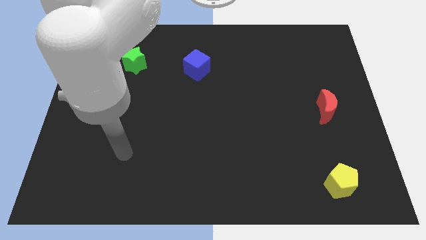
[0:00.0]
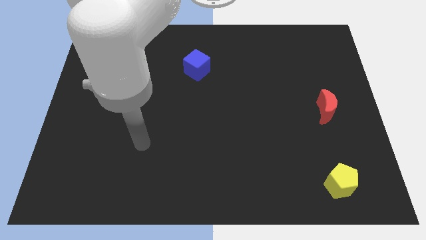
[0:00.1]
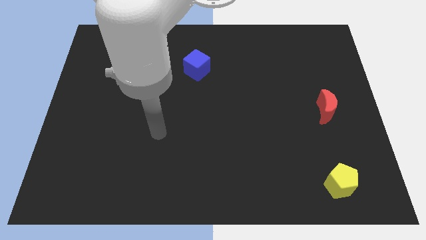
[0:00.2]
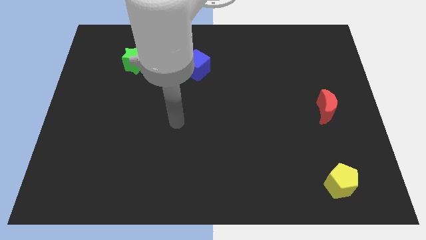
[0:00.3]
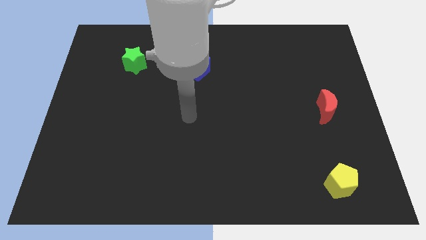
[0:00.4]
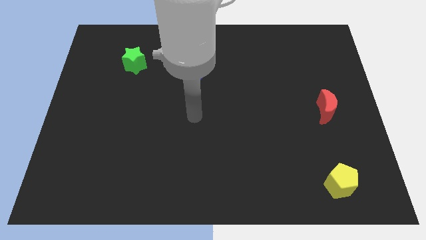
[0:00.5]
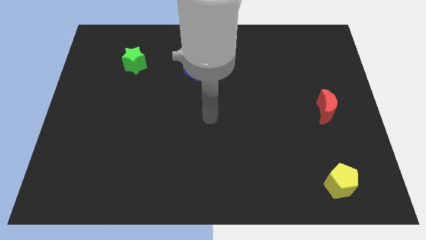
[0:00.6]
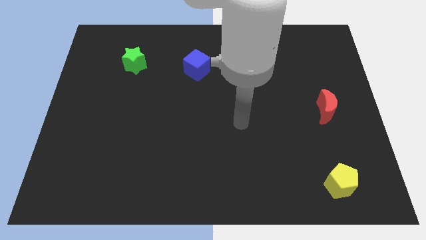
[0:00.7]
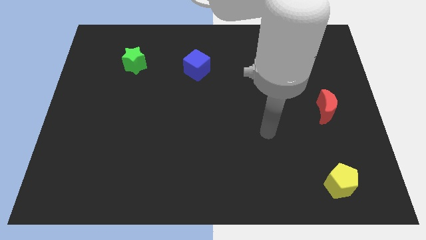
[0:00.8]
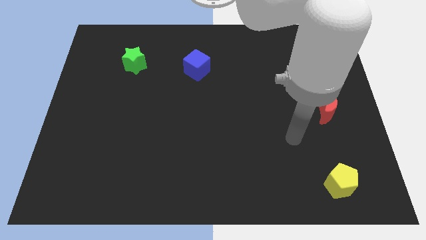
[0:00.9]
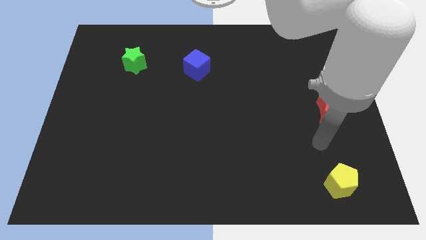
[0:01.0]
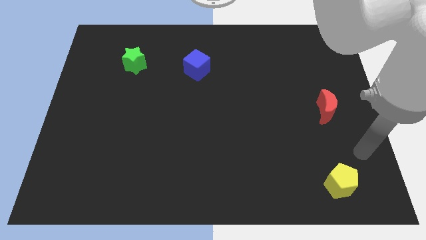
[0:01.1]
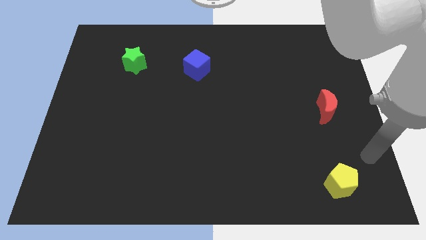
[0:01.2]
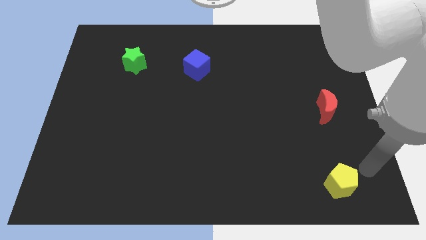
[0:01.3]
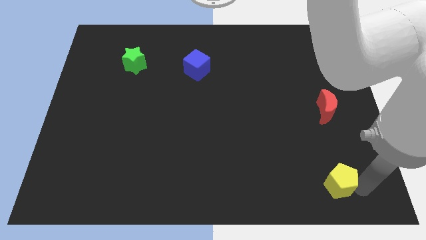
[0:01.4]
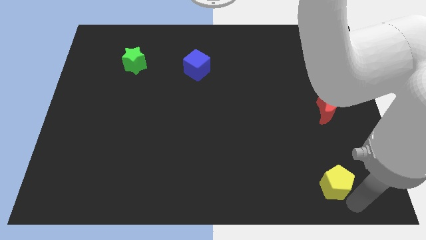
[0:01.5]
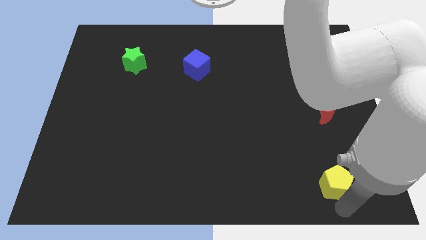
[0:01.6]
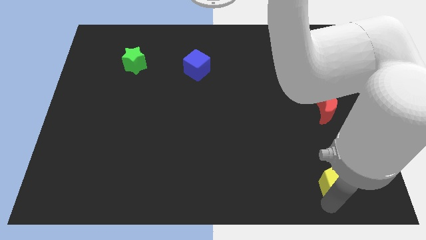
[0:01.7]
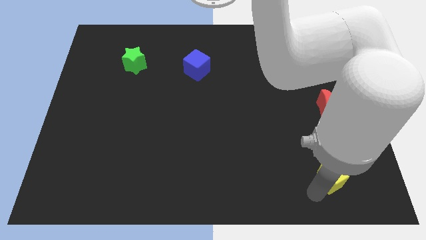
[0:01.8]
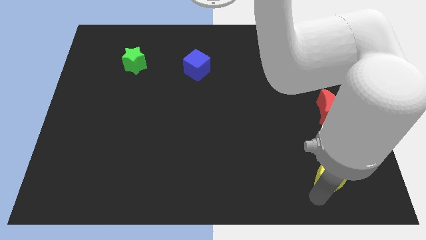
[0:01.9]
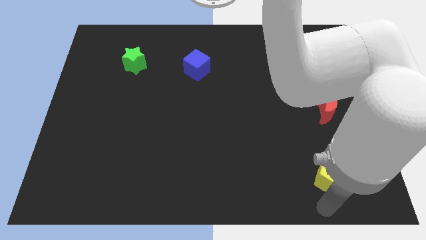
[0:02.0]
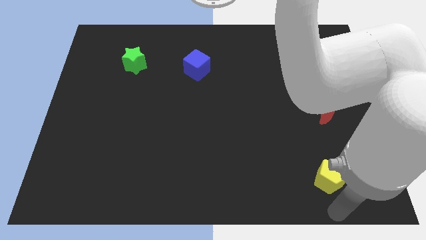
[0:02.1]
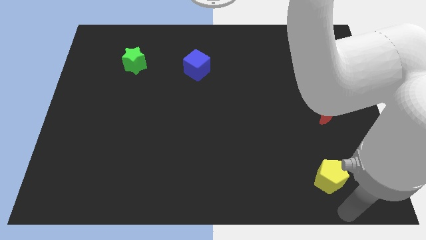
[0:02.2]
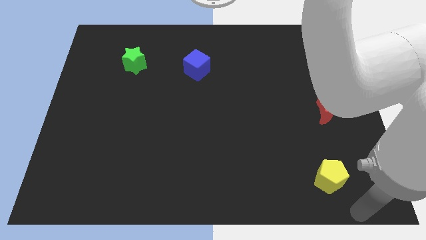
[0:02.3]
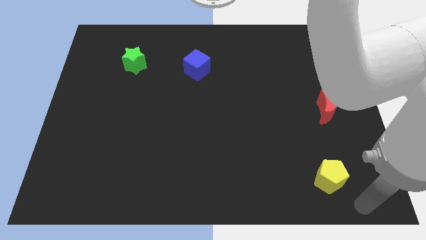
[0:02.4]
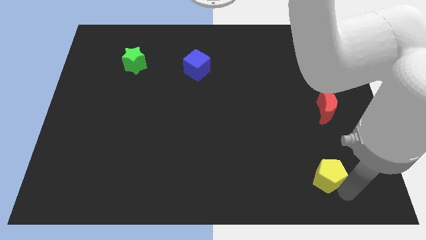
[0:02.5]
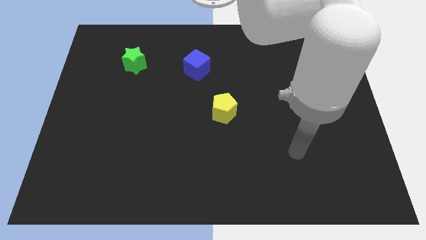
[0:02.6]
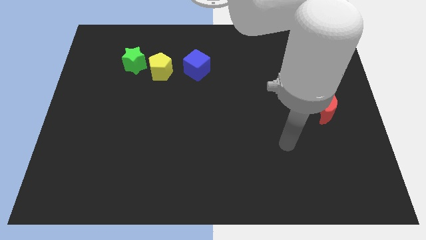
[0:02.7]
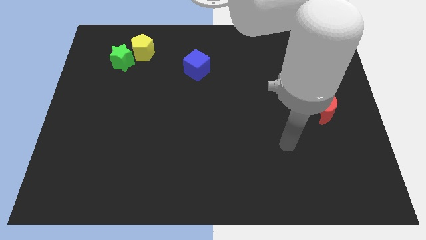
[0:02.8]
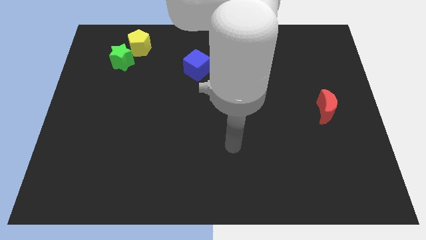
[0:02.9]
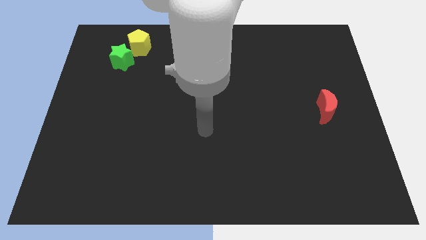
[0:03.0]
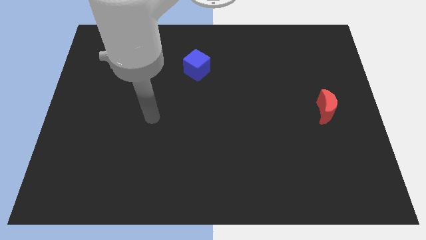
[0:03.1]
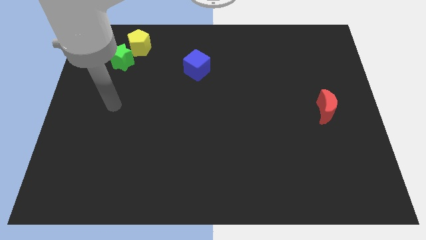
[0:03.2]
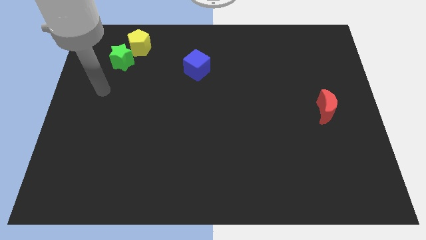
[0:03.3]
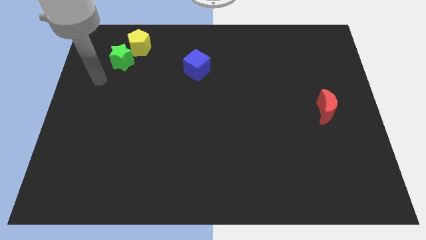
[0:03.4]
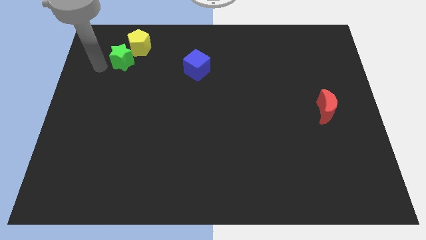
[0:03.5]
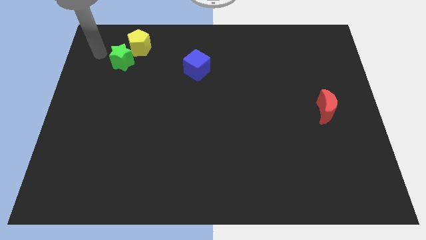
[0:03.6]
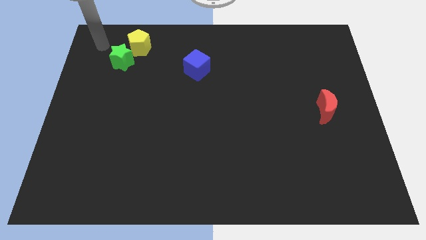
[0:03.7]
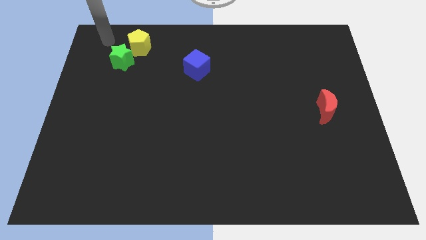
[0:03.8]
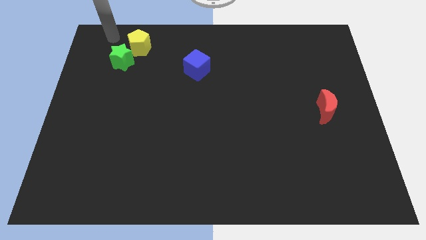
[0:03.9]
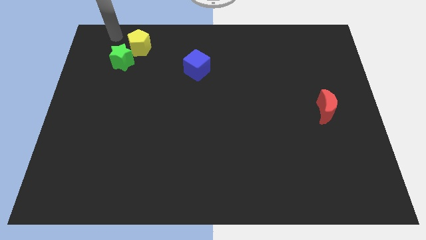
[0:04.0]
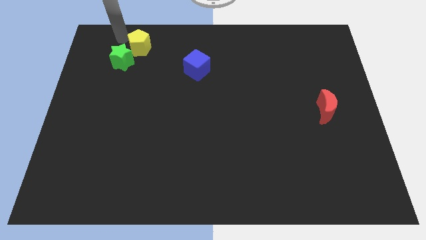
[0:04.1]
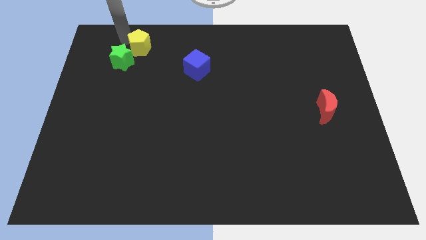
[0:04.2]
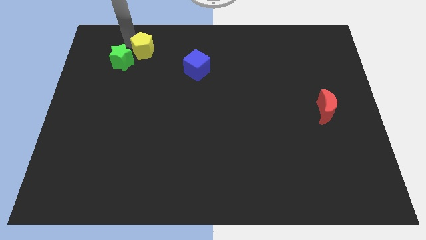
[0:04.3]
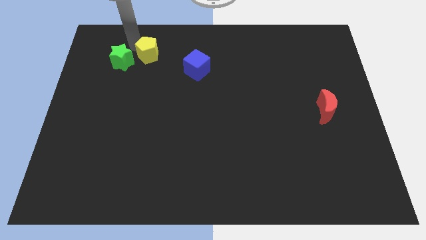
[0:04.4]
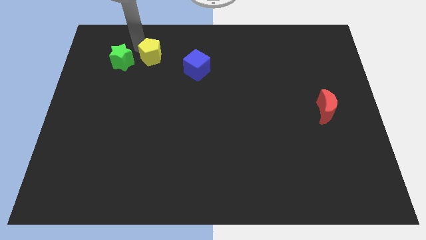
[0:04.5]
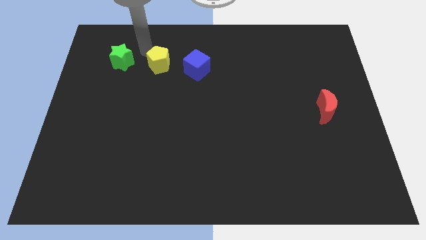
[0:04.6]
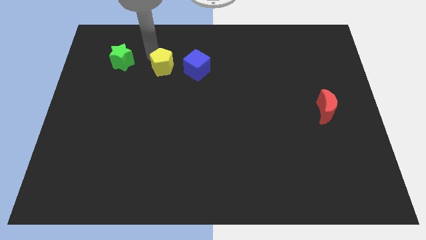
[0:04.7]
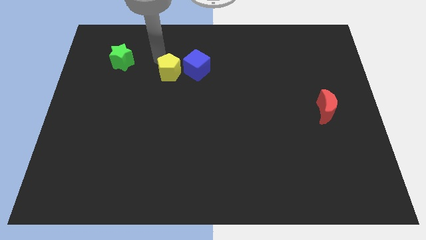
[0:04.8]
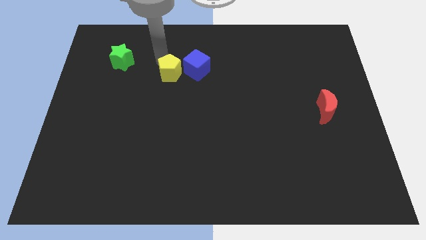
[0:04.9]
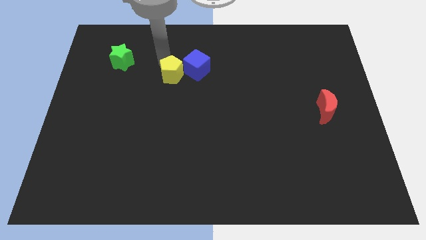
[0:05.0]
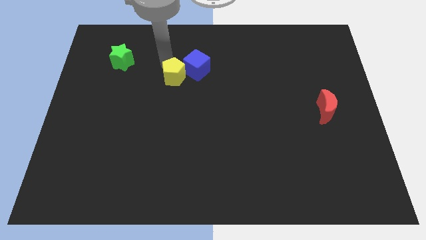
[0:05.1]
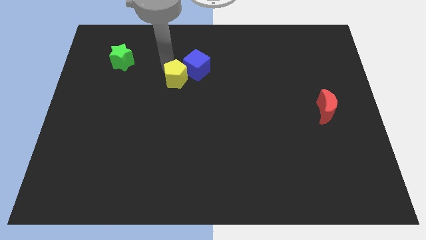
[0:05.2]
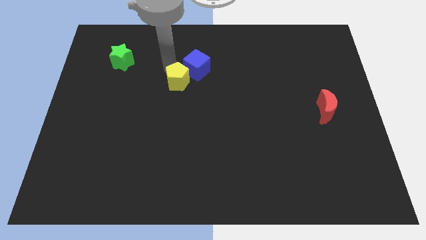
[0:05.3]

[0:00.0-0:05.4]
put the yellow pentagon next to the cube

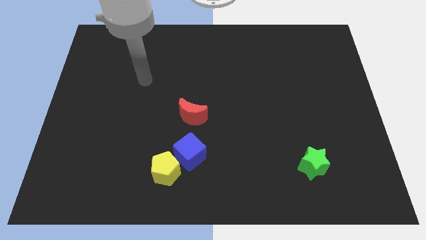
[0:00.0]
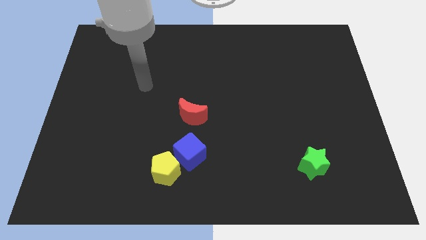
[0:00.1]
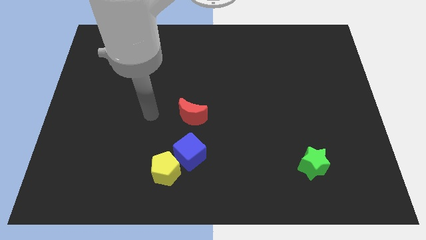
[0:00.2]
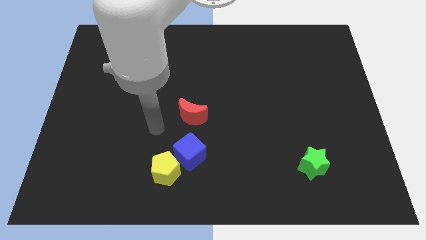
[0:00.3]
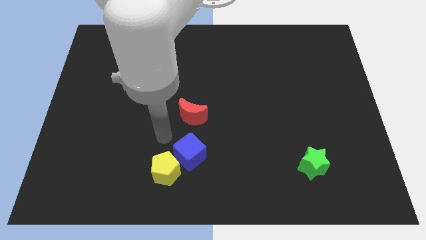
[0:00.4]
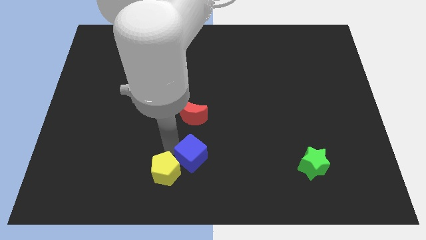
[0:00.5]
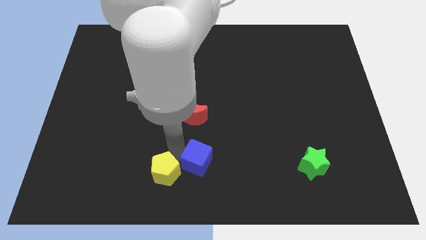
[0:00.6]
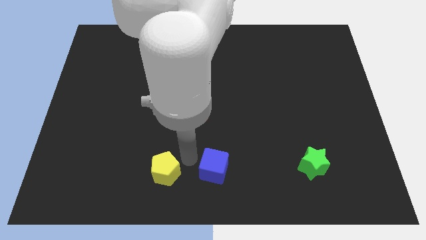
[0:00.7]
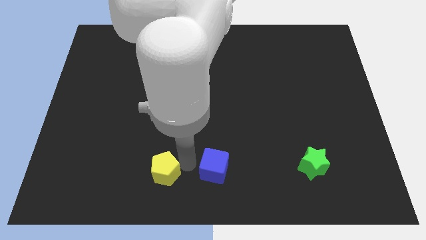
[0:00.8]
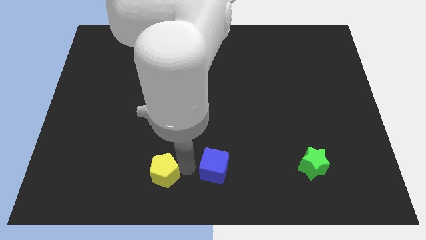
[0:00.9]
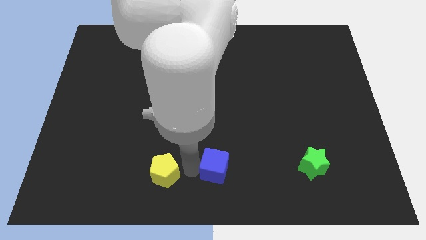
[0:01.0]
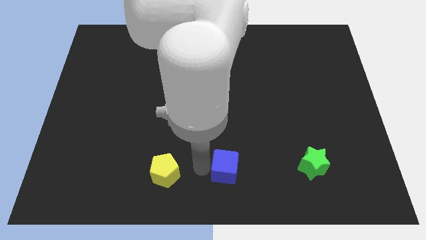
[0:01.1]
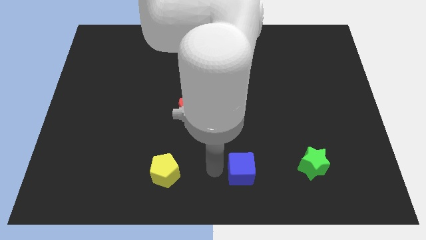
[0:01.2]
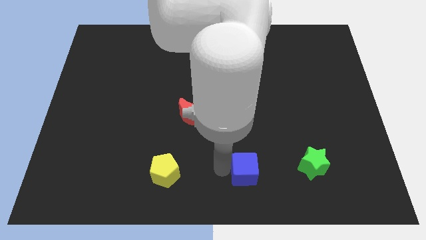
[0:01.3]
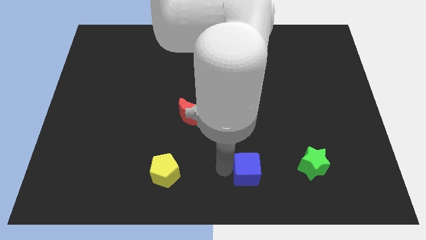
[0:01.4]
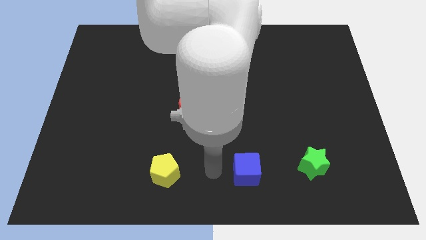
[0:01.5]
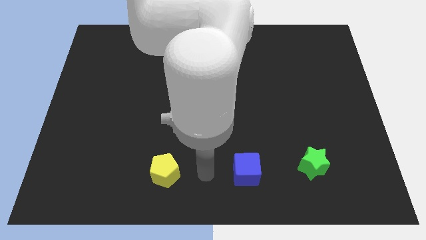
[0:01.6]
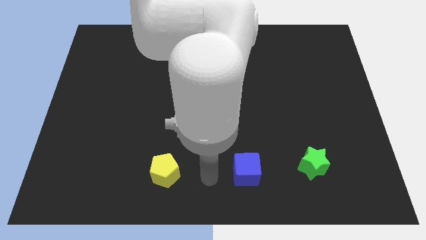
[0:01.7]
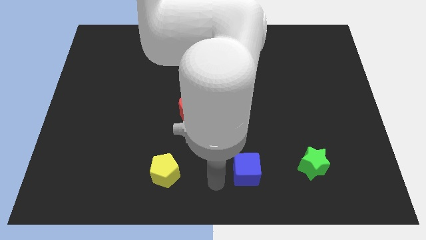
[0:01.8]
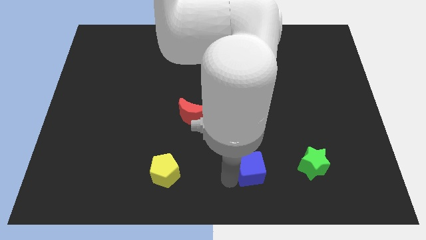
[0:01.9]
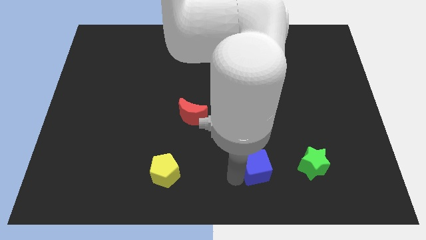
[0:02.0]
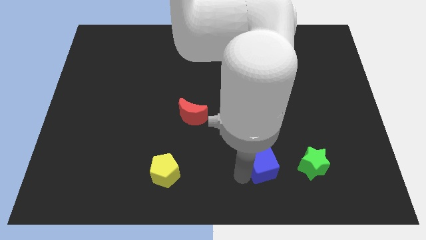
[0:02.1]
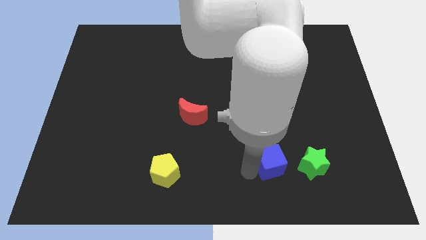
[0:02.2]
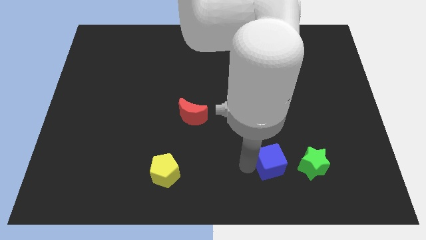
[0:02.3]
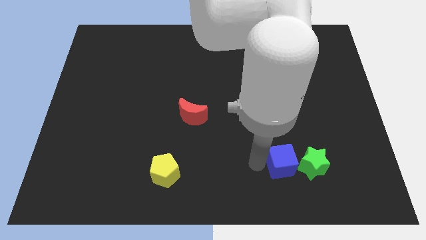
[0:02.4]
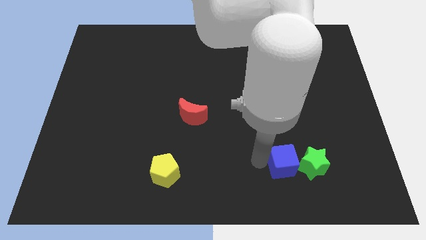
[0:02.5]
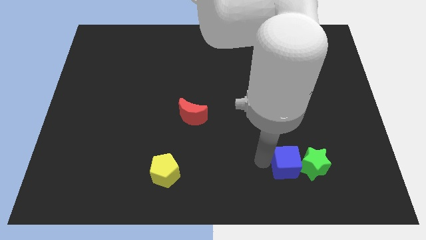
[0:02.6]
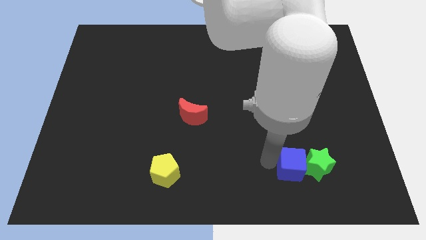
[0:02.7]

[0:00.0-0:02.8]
slide the blue cube to the green star

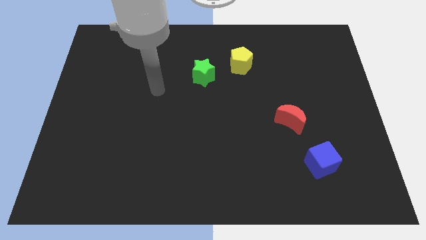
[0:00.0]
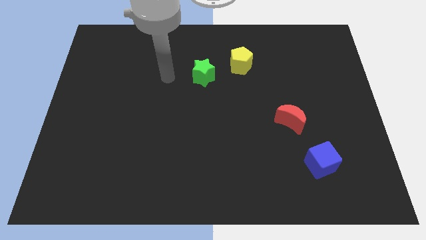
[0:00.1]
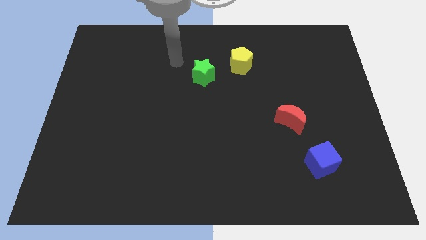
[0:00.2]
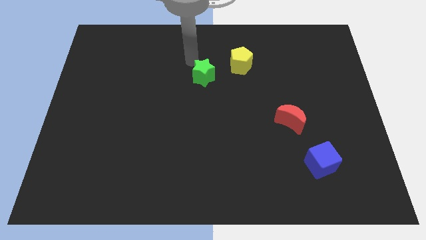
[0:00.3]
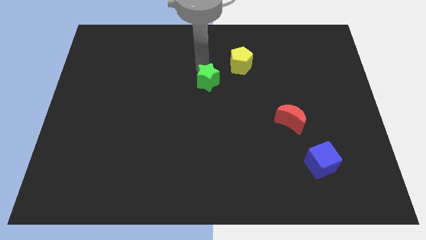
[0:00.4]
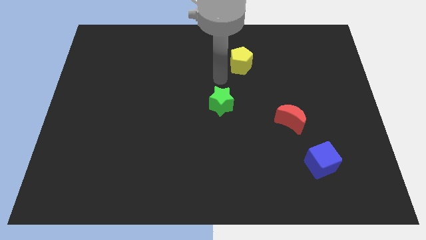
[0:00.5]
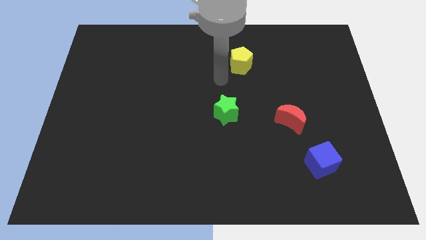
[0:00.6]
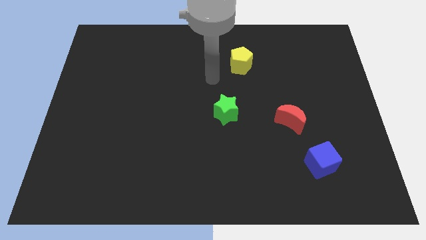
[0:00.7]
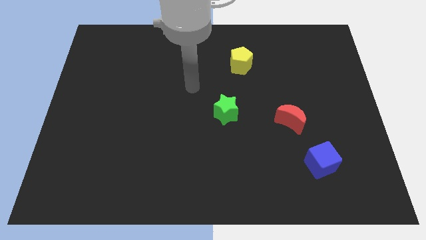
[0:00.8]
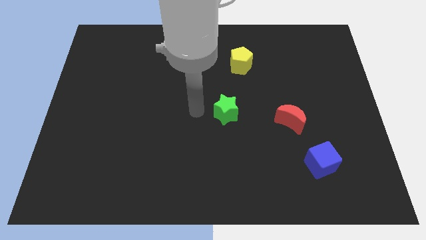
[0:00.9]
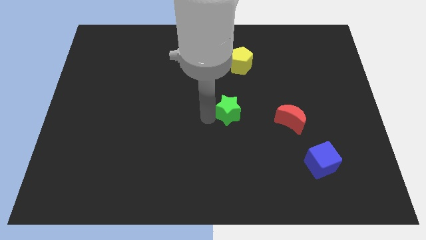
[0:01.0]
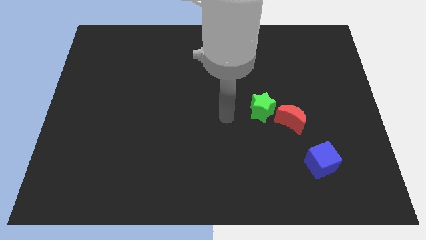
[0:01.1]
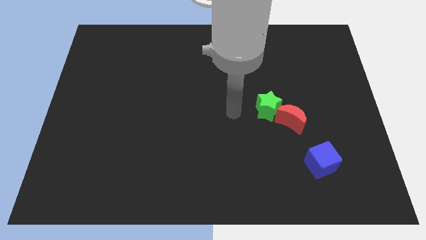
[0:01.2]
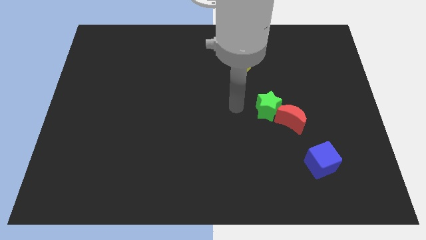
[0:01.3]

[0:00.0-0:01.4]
put the star to the moon
